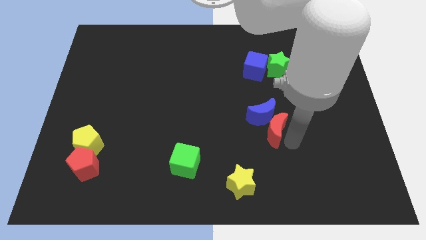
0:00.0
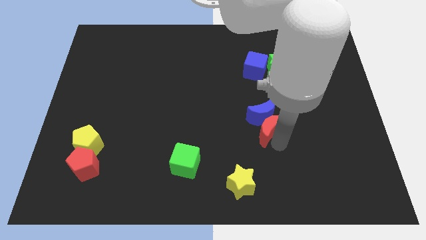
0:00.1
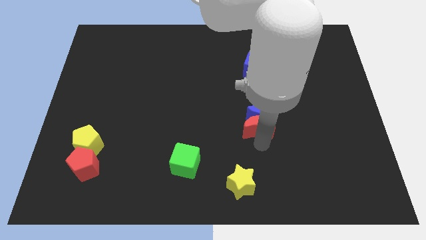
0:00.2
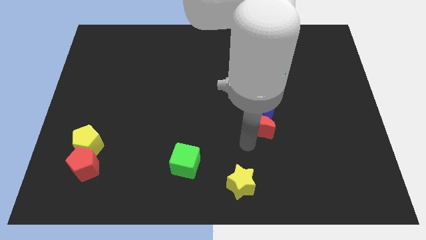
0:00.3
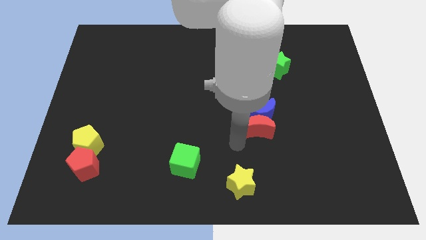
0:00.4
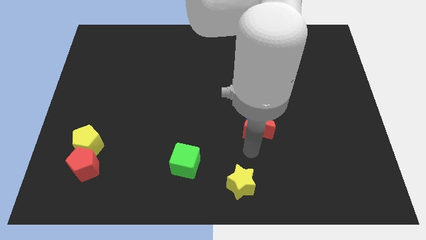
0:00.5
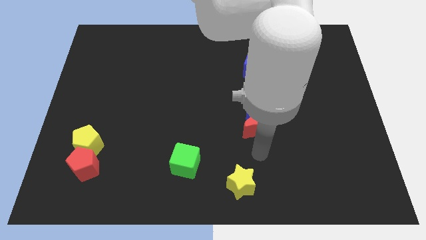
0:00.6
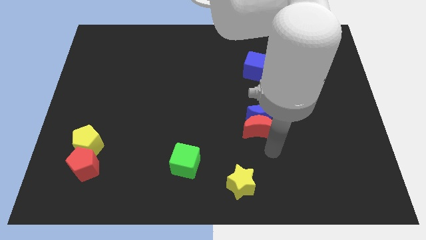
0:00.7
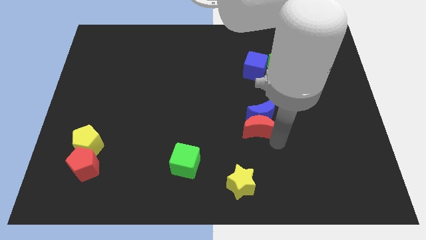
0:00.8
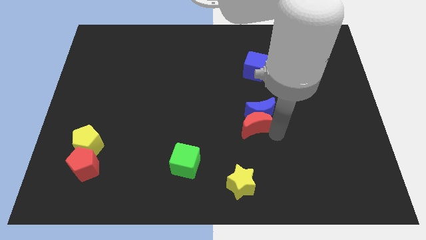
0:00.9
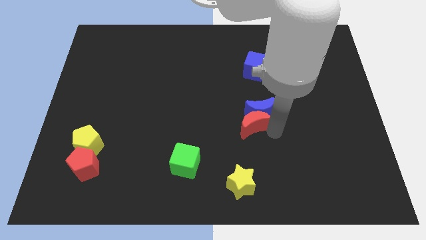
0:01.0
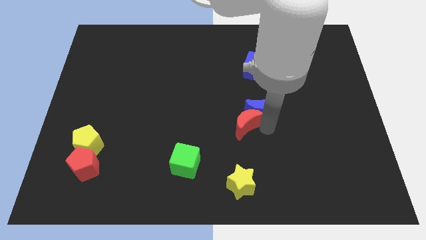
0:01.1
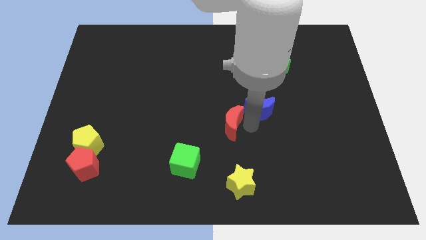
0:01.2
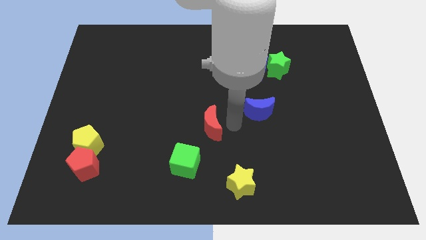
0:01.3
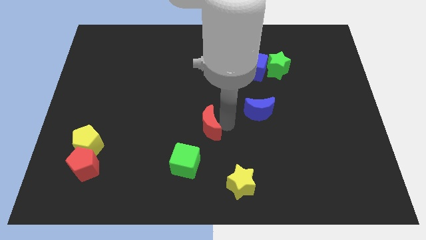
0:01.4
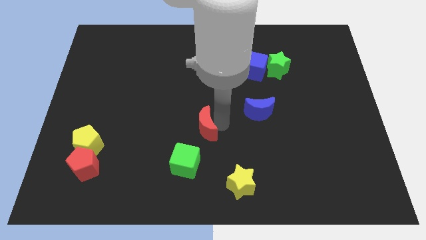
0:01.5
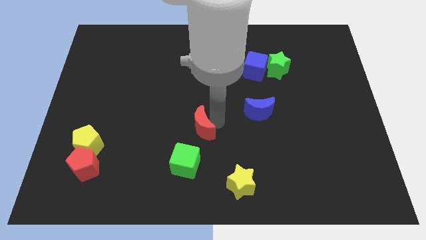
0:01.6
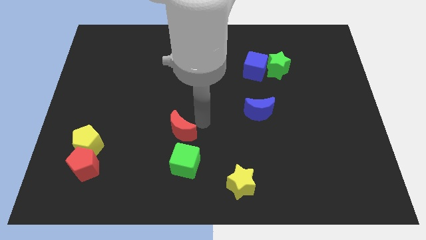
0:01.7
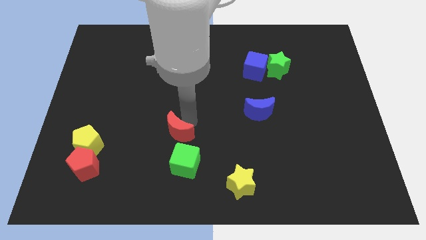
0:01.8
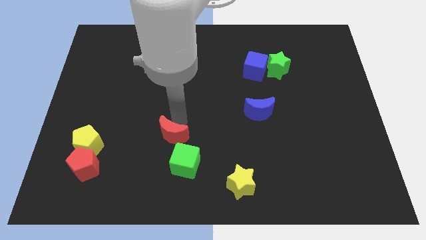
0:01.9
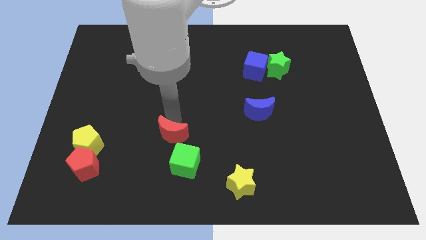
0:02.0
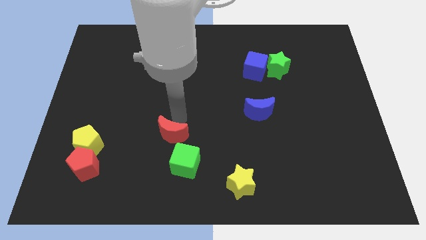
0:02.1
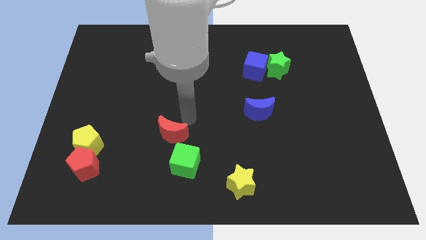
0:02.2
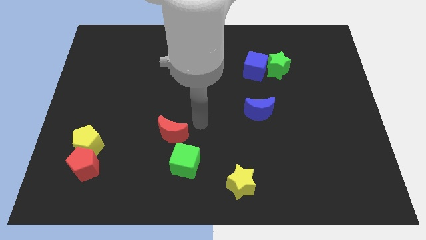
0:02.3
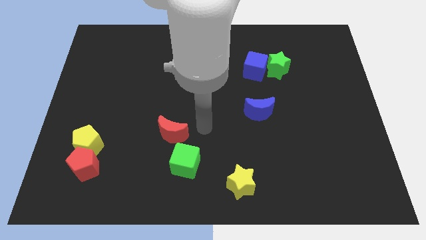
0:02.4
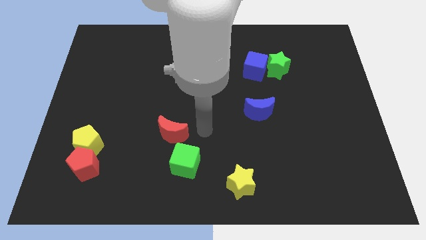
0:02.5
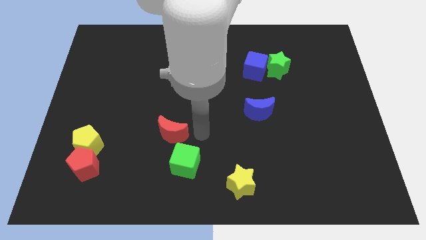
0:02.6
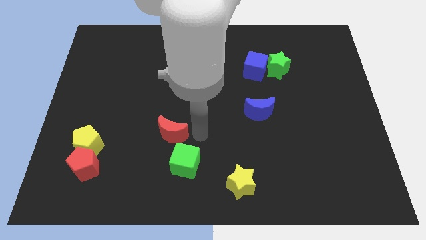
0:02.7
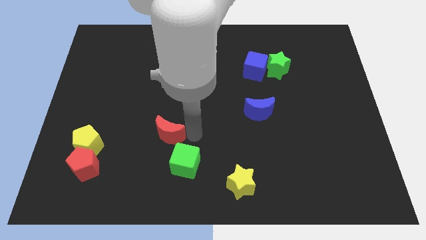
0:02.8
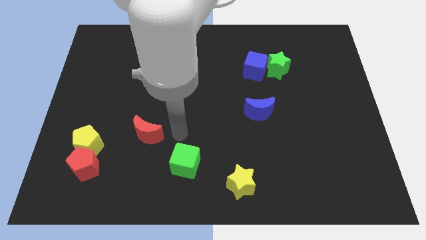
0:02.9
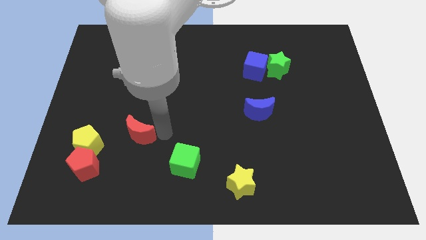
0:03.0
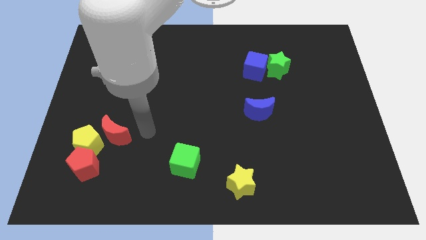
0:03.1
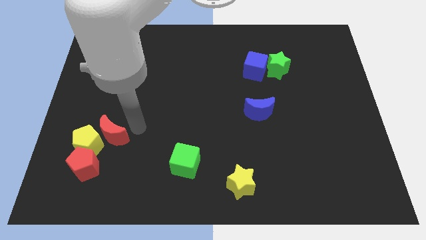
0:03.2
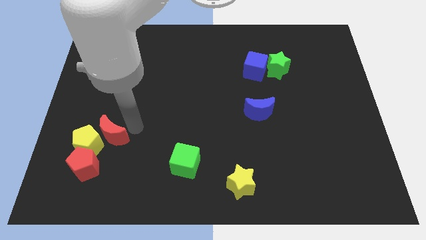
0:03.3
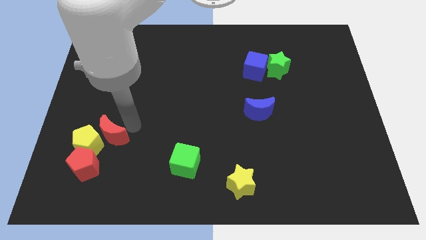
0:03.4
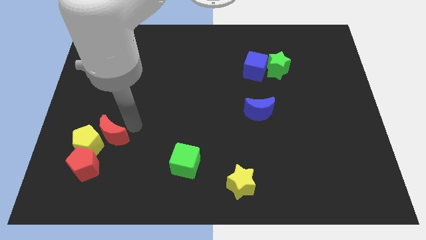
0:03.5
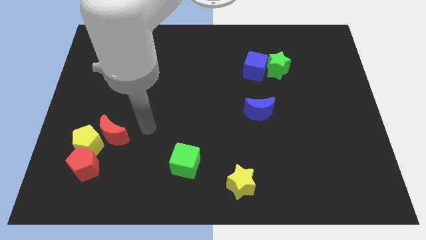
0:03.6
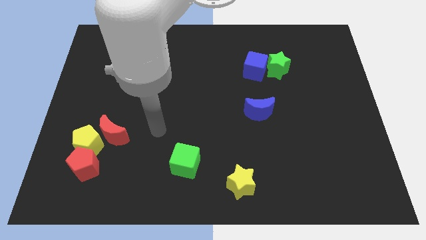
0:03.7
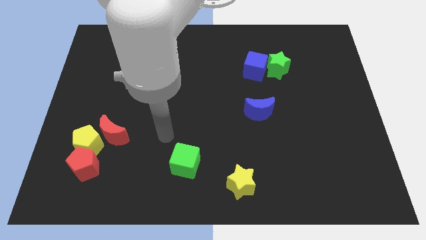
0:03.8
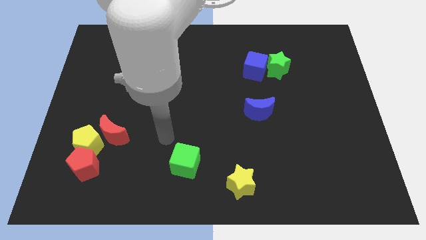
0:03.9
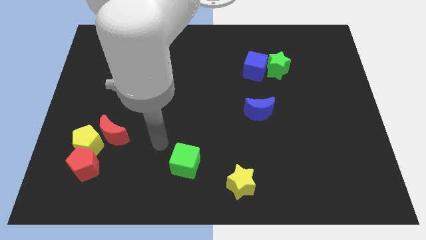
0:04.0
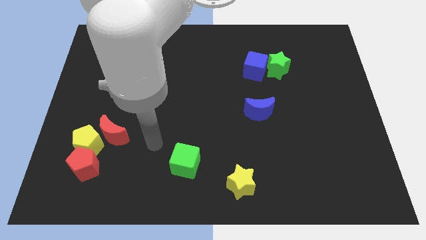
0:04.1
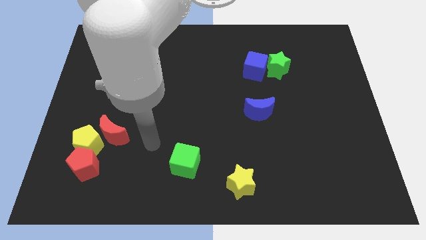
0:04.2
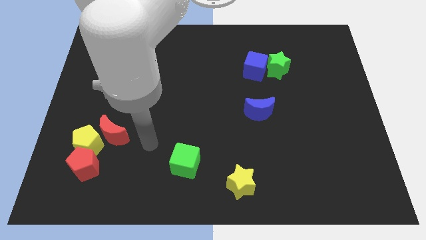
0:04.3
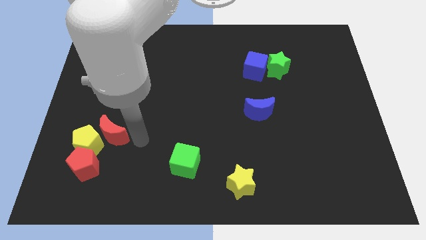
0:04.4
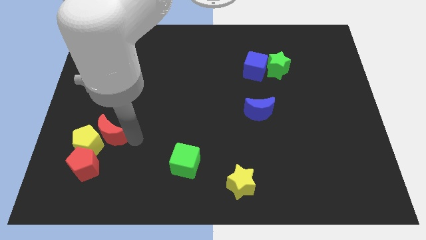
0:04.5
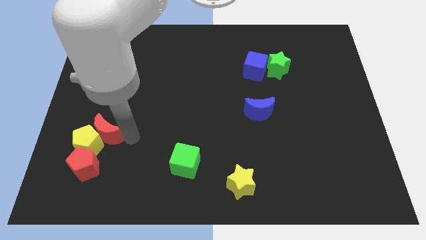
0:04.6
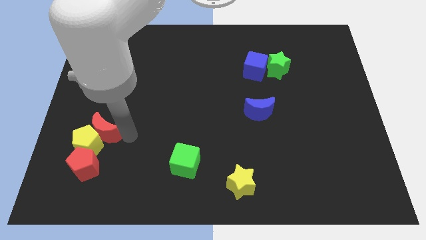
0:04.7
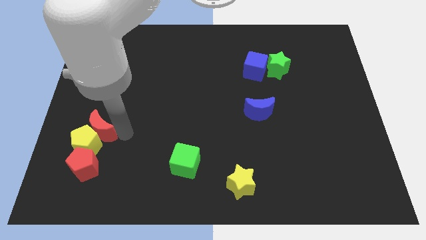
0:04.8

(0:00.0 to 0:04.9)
move red crescent above yellow pentagon

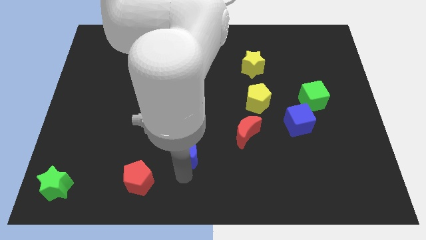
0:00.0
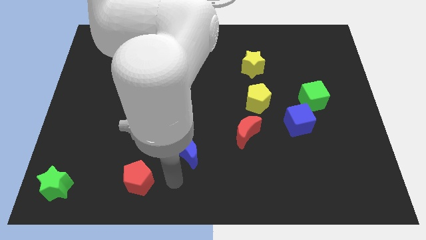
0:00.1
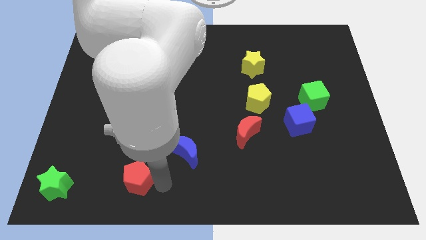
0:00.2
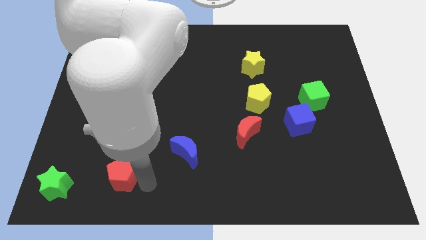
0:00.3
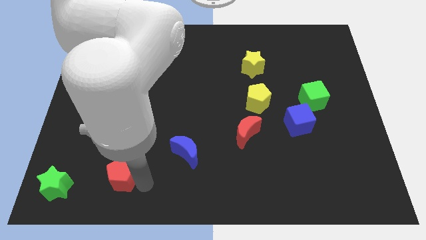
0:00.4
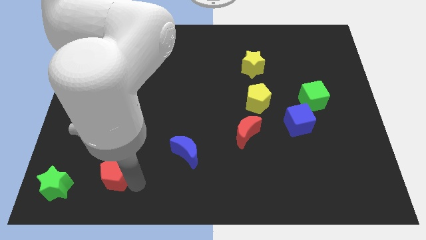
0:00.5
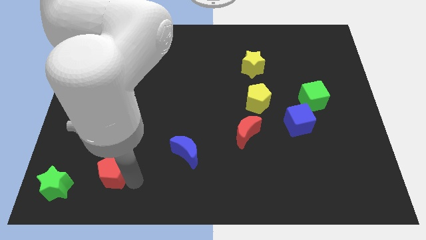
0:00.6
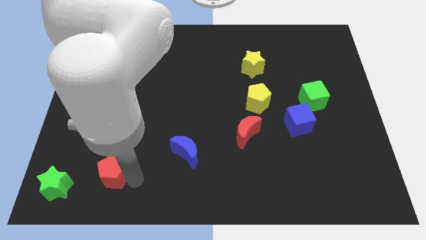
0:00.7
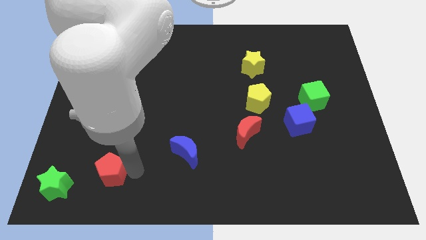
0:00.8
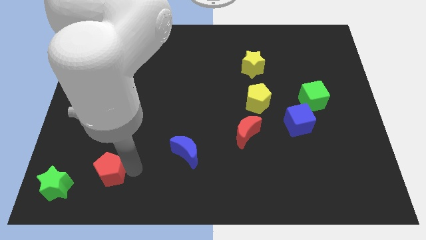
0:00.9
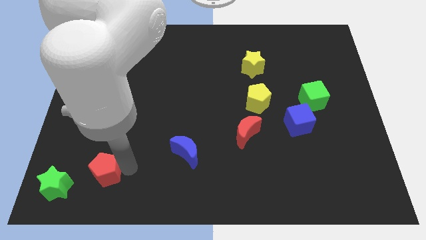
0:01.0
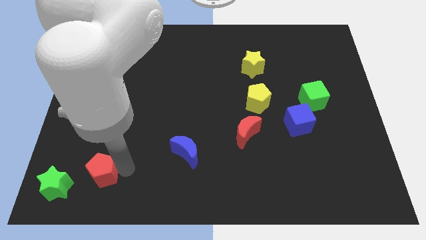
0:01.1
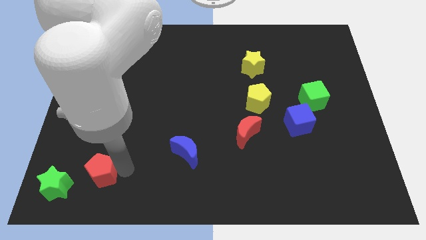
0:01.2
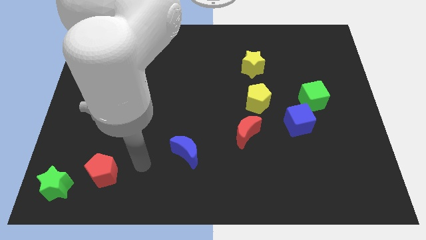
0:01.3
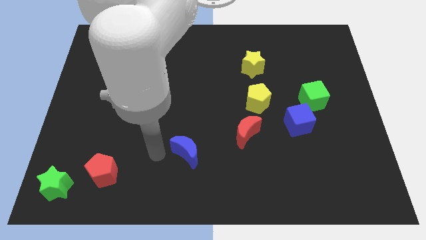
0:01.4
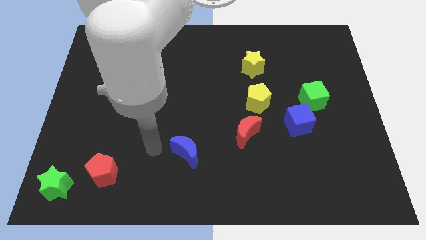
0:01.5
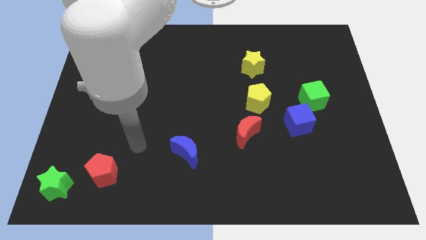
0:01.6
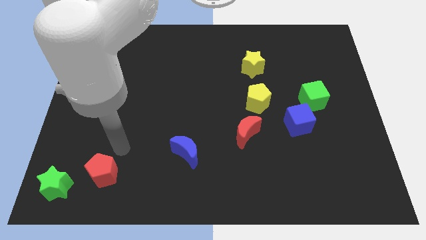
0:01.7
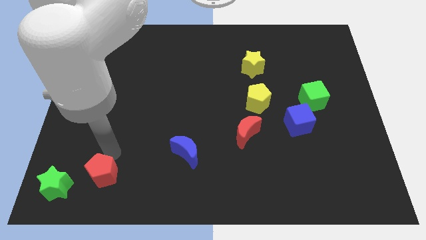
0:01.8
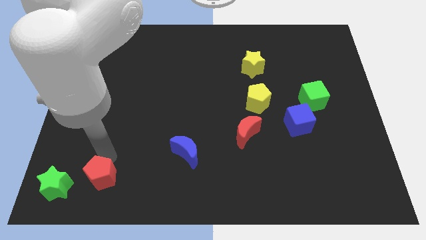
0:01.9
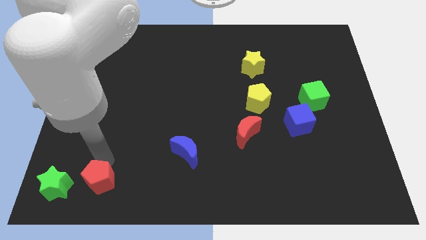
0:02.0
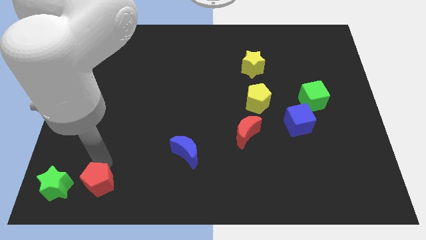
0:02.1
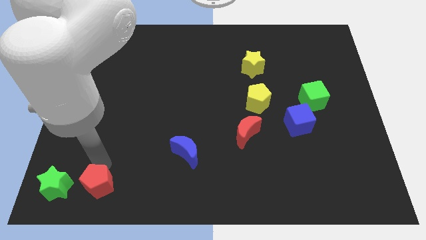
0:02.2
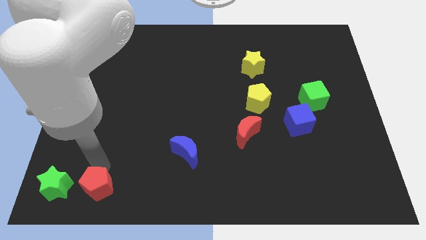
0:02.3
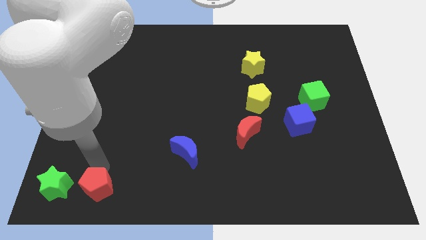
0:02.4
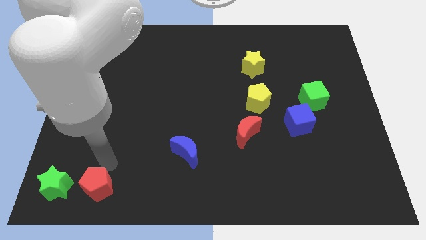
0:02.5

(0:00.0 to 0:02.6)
push the red pentagon right to the green star

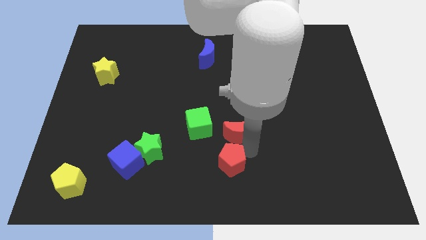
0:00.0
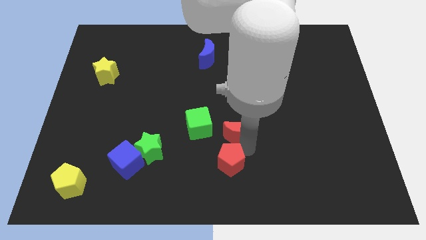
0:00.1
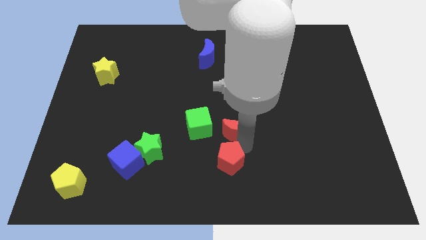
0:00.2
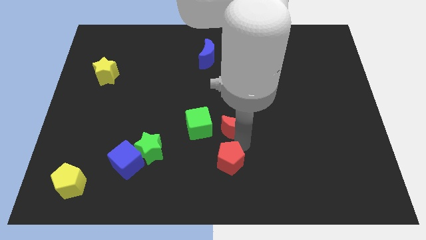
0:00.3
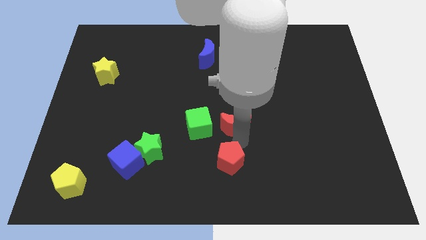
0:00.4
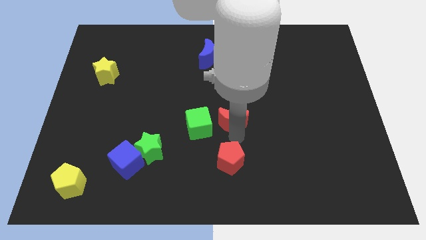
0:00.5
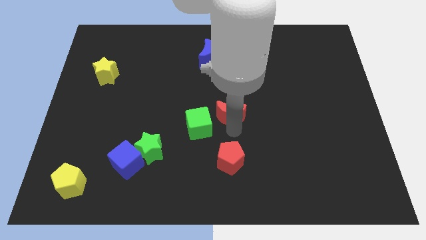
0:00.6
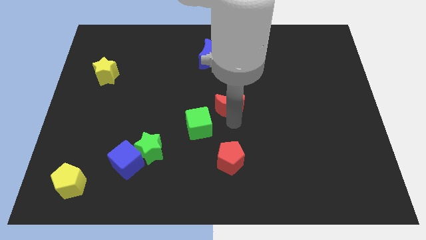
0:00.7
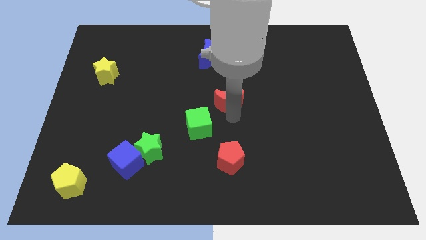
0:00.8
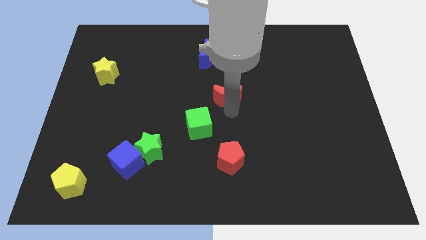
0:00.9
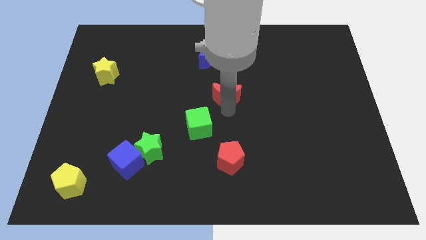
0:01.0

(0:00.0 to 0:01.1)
place the red crescent at center of the board

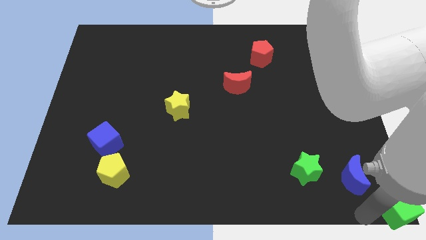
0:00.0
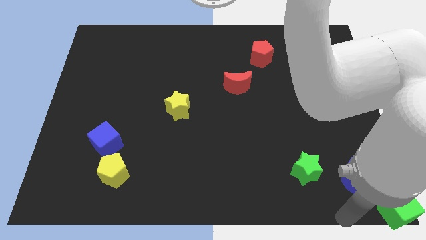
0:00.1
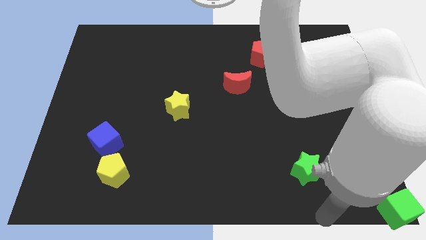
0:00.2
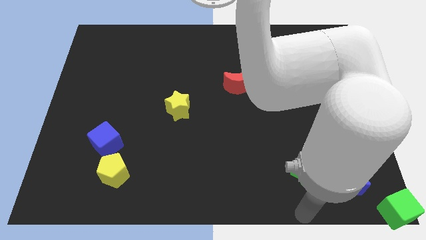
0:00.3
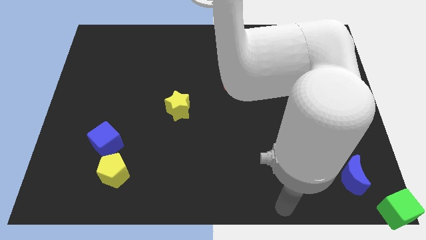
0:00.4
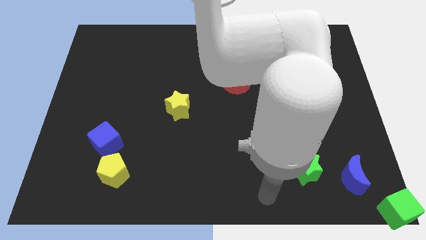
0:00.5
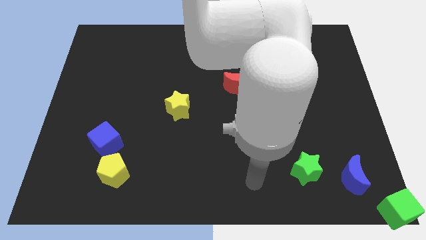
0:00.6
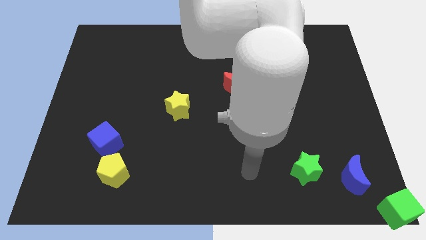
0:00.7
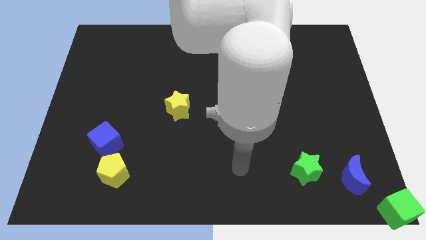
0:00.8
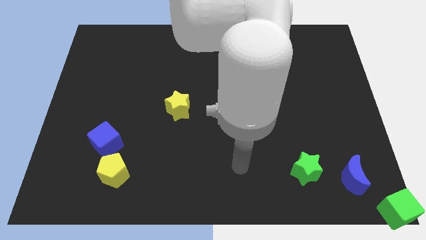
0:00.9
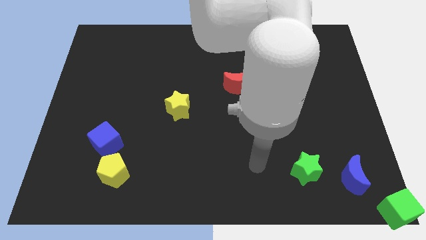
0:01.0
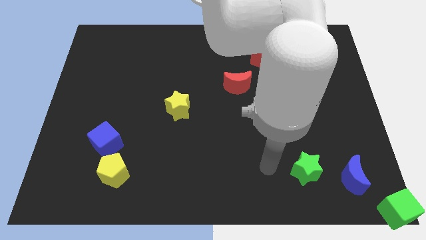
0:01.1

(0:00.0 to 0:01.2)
place your arm at the left of the green star
